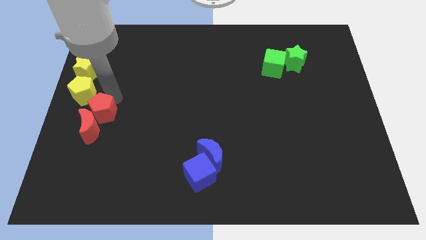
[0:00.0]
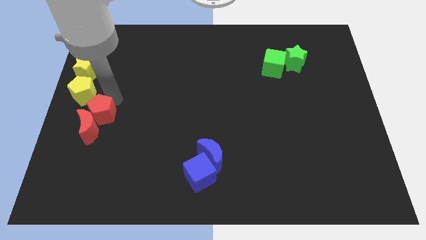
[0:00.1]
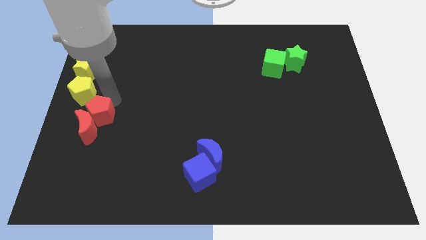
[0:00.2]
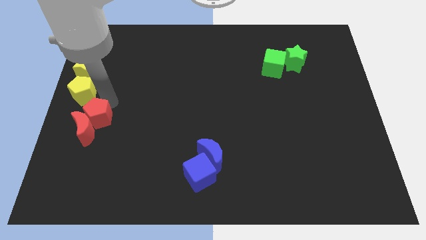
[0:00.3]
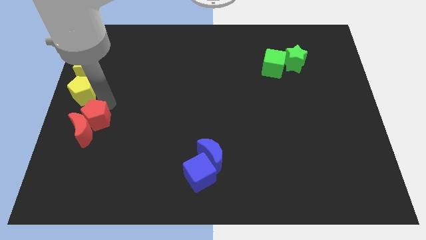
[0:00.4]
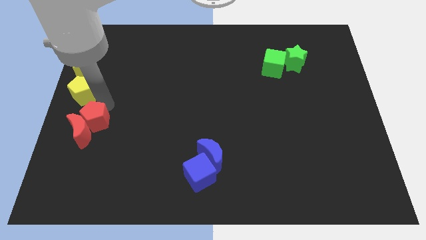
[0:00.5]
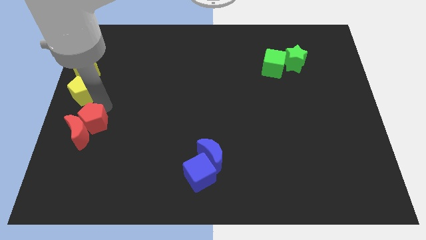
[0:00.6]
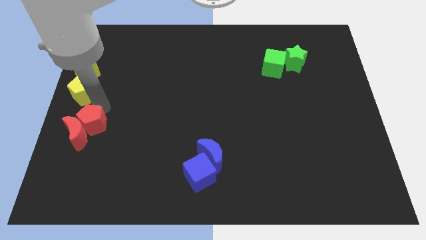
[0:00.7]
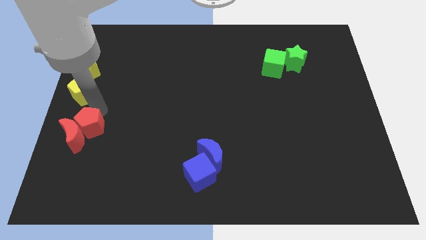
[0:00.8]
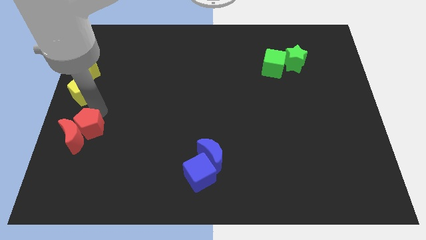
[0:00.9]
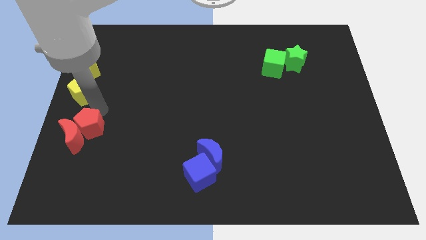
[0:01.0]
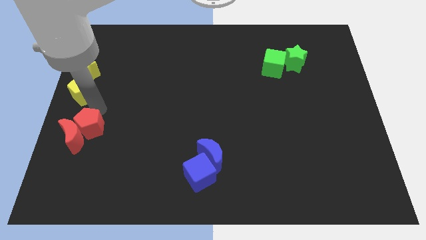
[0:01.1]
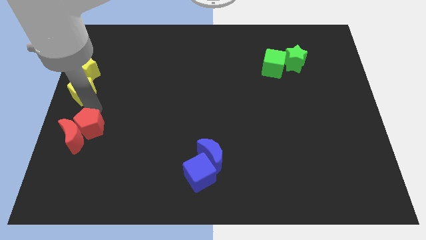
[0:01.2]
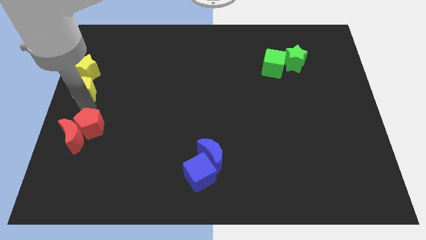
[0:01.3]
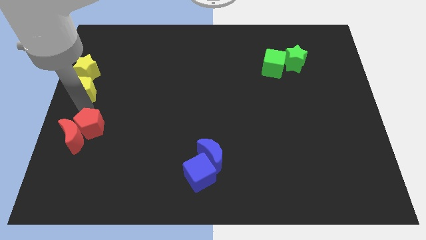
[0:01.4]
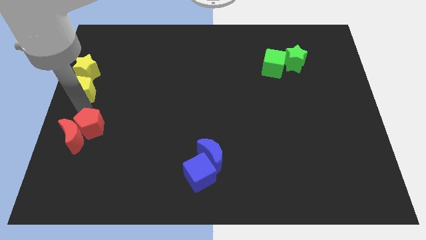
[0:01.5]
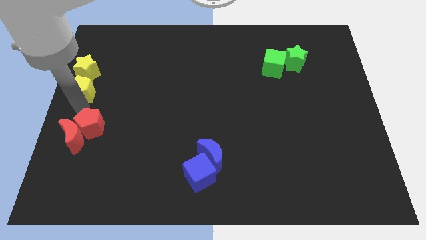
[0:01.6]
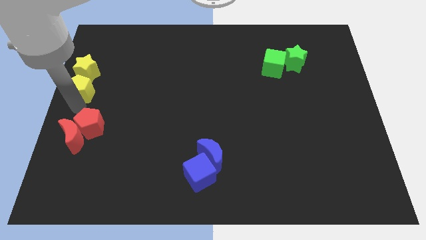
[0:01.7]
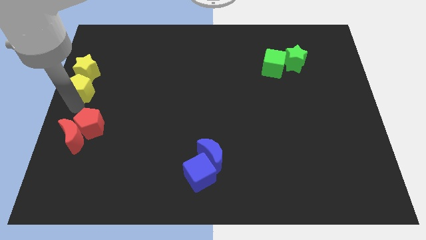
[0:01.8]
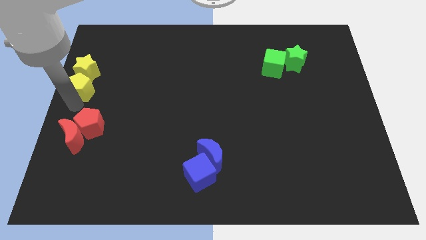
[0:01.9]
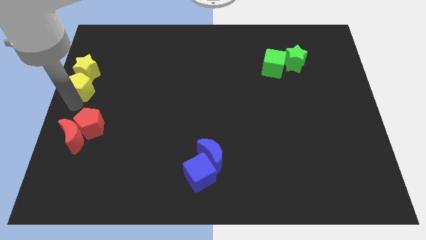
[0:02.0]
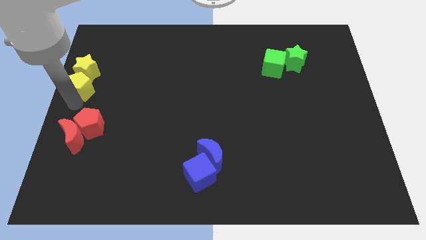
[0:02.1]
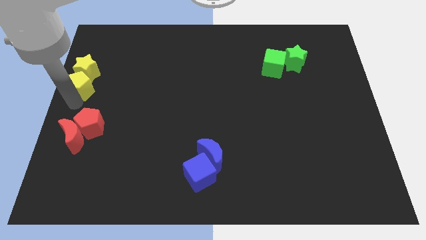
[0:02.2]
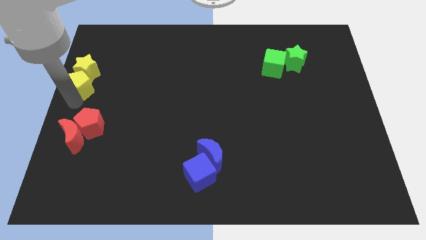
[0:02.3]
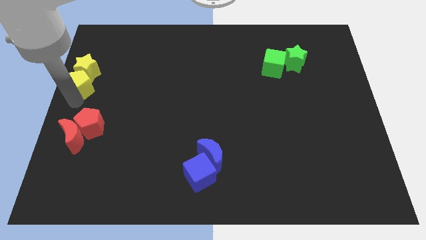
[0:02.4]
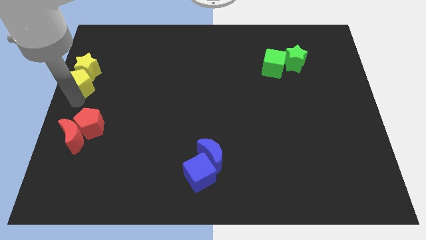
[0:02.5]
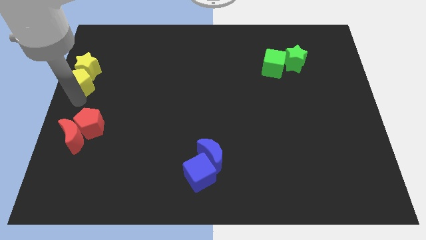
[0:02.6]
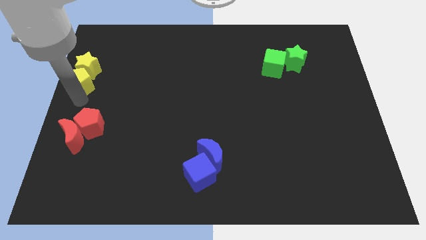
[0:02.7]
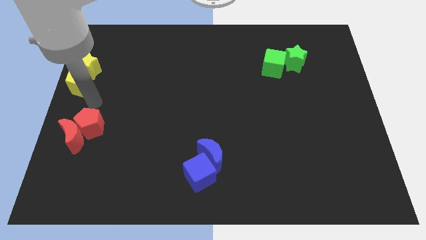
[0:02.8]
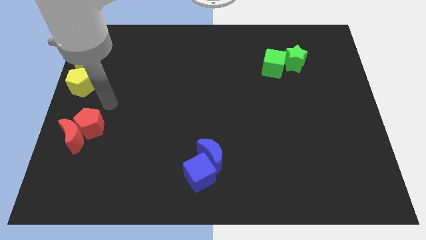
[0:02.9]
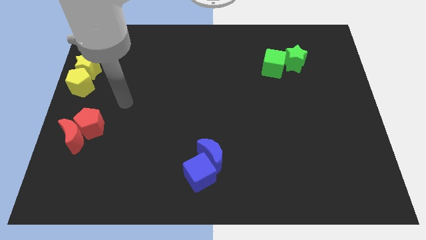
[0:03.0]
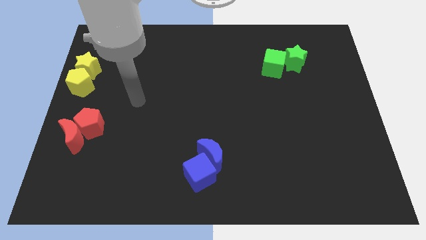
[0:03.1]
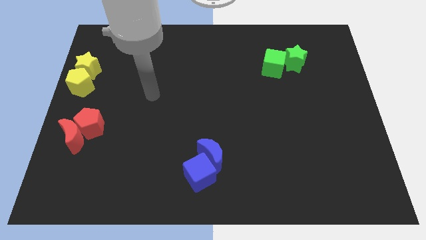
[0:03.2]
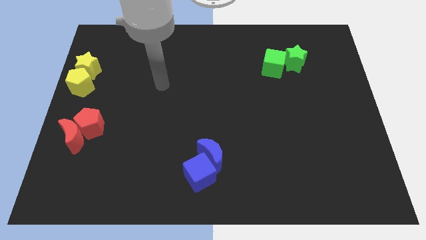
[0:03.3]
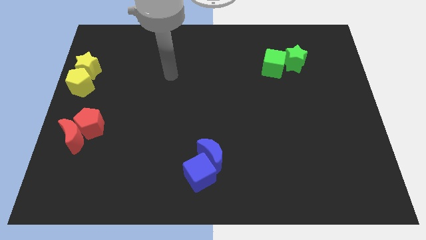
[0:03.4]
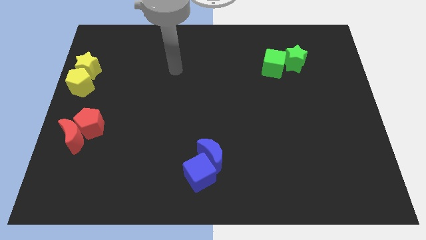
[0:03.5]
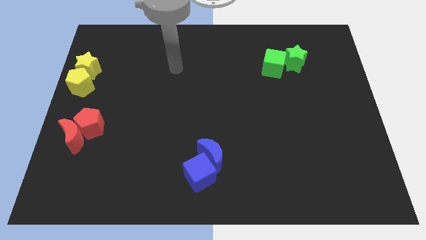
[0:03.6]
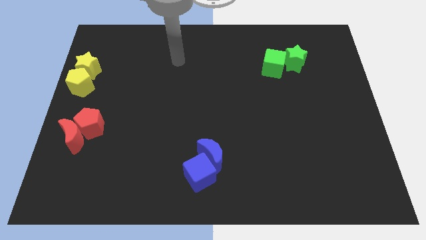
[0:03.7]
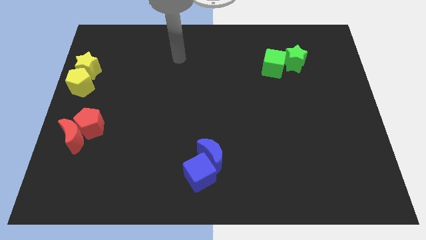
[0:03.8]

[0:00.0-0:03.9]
move the yellow pentagon slightly towards up

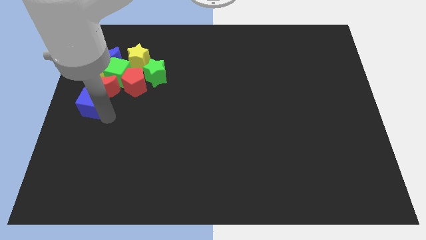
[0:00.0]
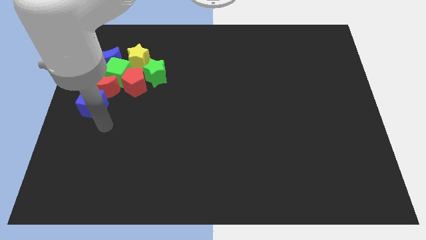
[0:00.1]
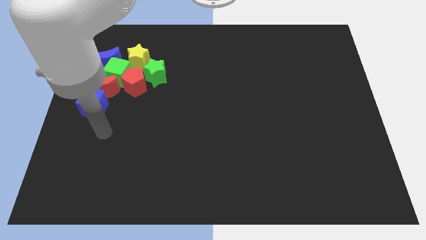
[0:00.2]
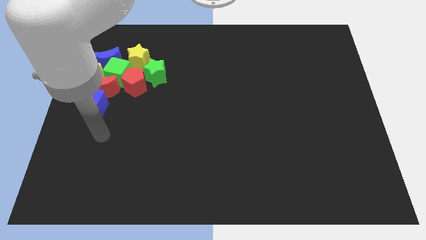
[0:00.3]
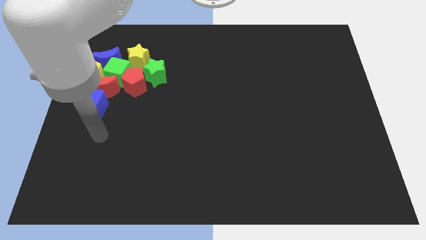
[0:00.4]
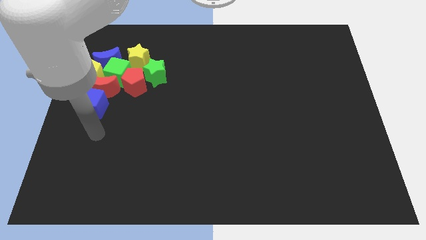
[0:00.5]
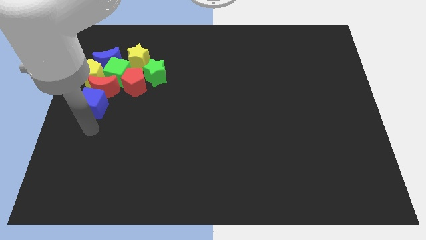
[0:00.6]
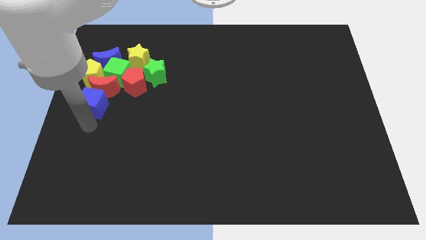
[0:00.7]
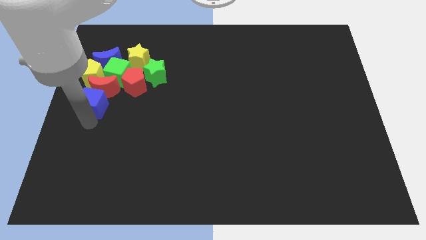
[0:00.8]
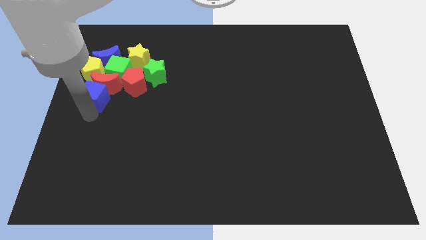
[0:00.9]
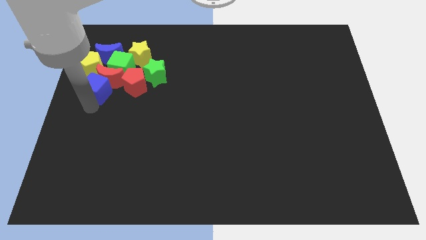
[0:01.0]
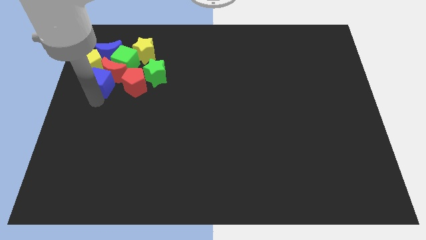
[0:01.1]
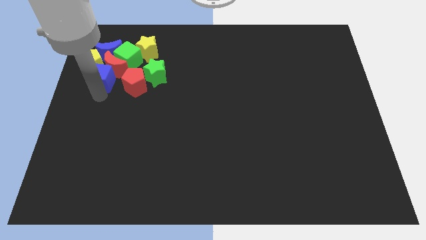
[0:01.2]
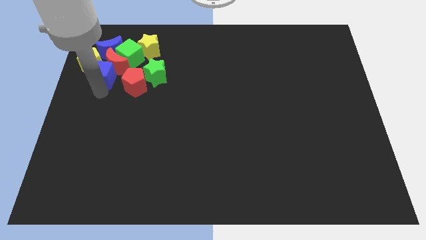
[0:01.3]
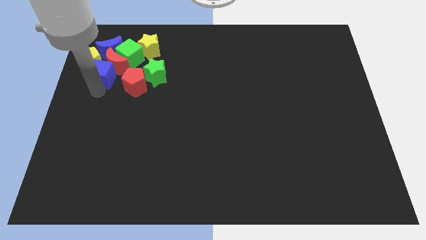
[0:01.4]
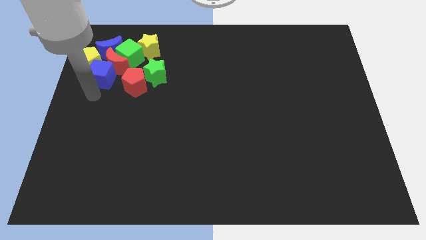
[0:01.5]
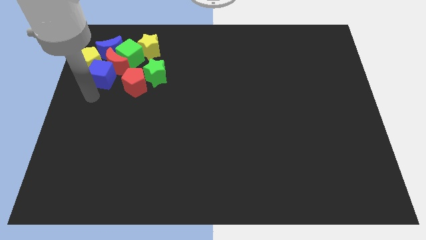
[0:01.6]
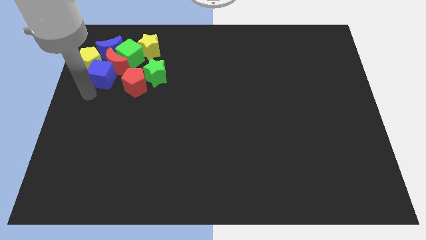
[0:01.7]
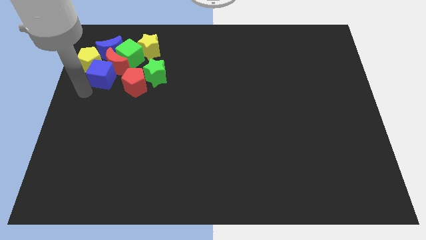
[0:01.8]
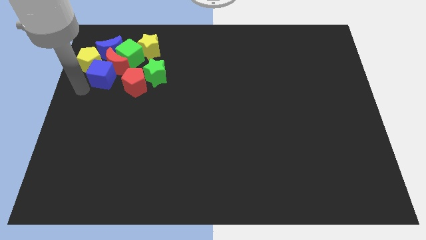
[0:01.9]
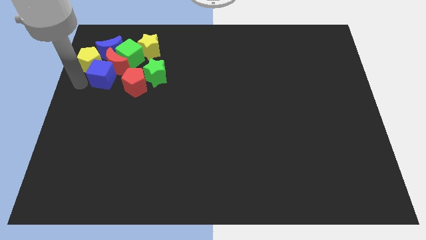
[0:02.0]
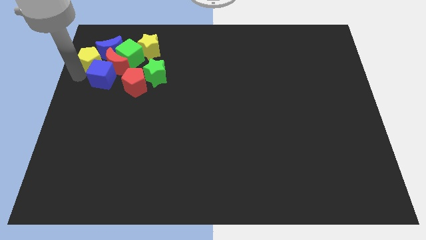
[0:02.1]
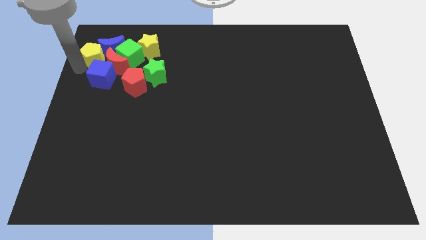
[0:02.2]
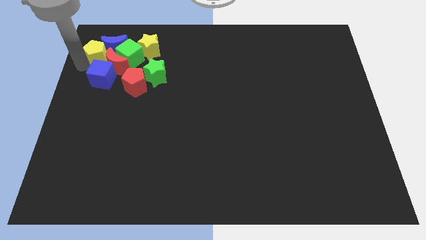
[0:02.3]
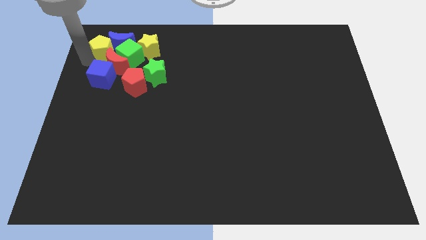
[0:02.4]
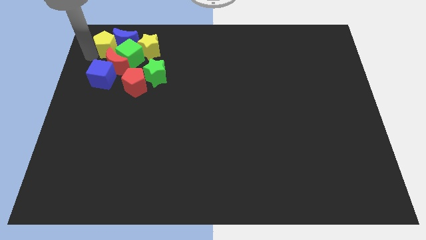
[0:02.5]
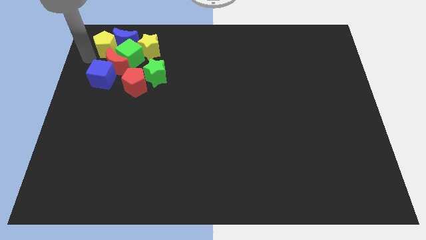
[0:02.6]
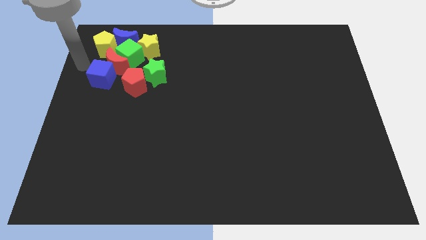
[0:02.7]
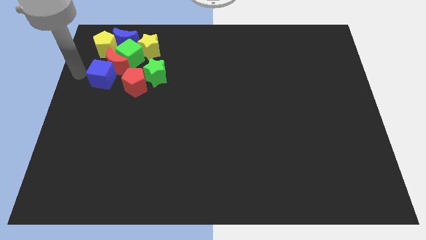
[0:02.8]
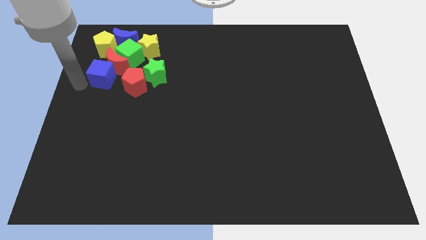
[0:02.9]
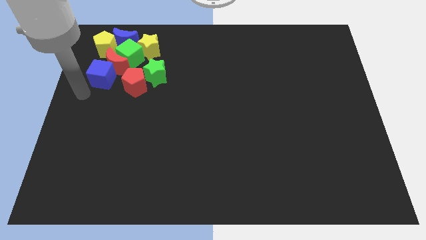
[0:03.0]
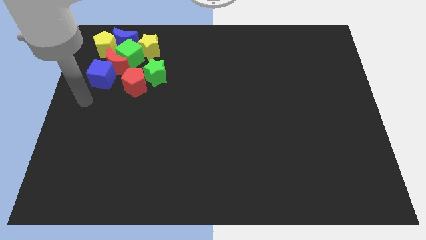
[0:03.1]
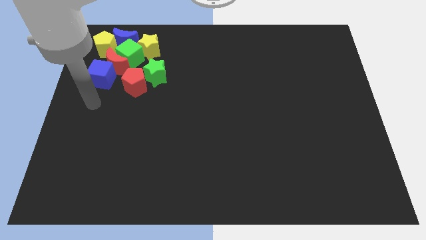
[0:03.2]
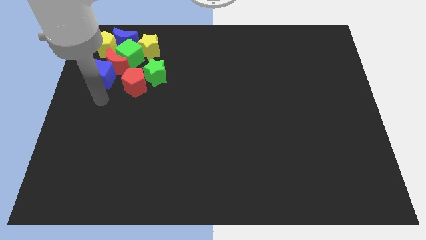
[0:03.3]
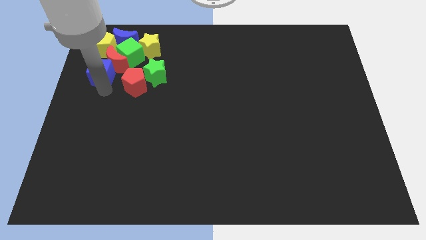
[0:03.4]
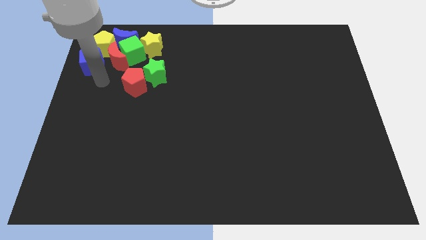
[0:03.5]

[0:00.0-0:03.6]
put the blue cube on the bottom side of the yellow pentagon

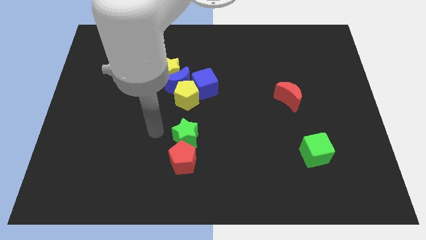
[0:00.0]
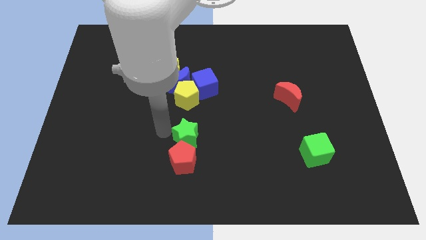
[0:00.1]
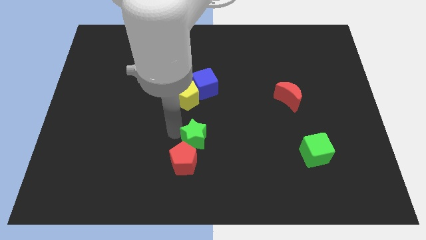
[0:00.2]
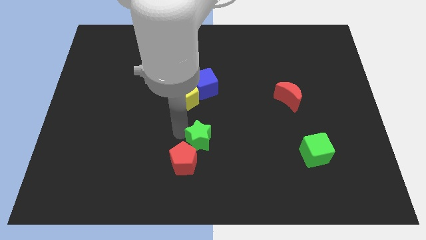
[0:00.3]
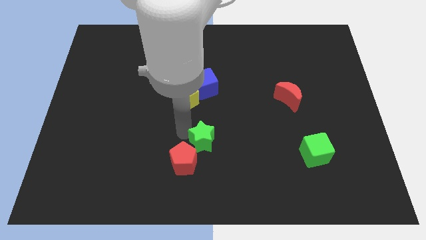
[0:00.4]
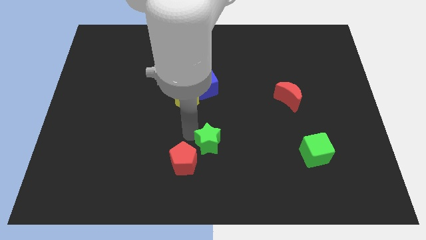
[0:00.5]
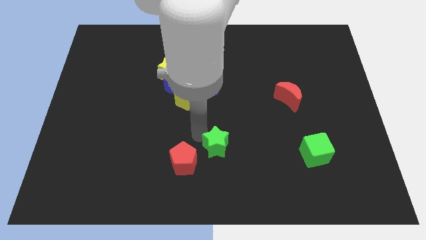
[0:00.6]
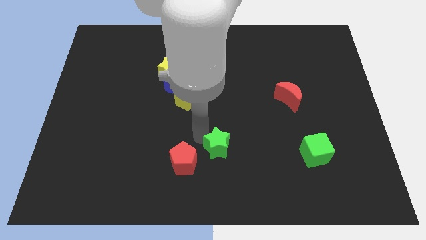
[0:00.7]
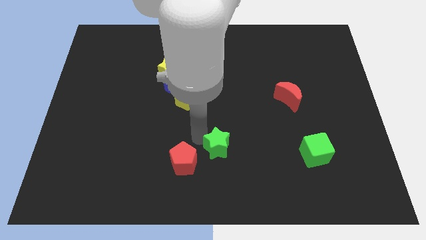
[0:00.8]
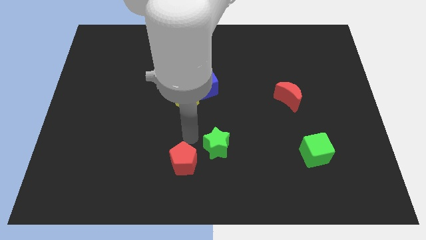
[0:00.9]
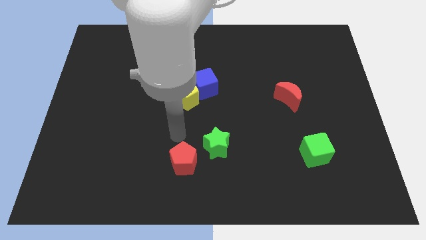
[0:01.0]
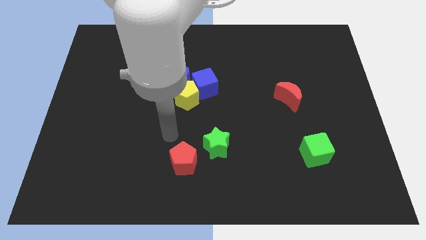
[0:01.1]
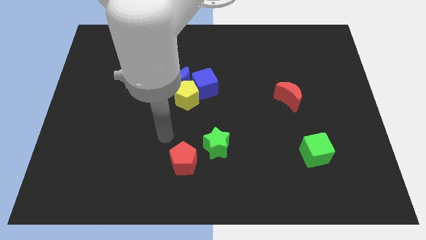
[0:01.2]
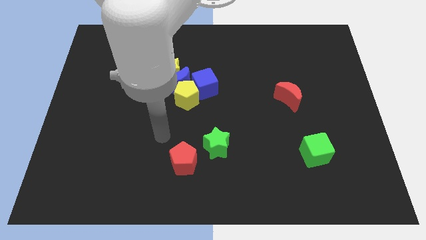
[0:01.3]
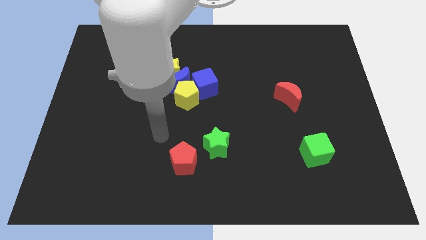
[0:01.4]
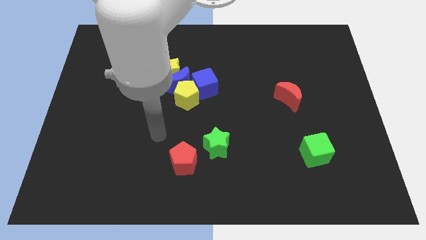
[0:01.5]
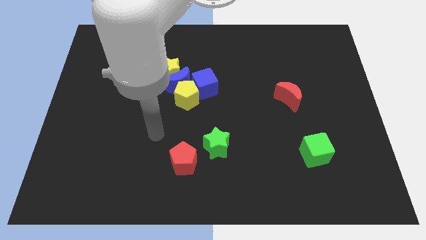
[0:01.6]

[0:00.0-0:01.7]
place green star to the right side of the red pentagon
